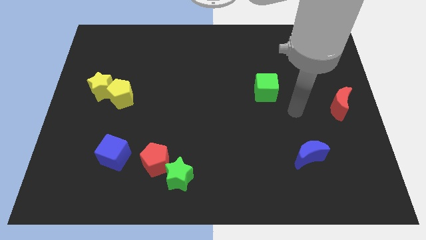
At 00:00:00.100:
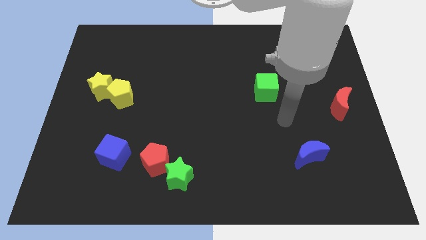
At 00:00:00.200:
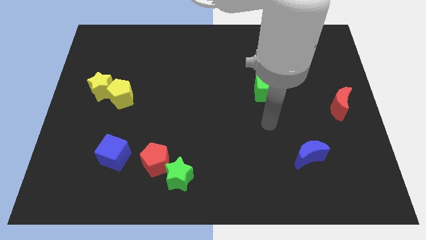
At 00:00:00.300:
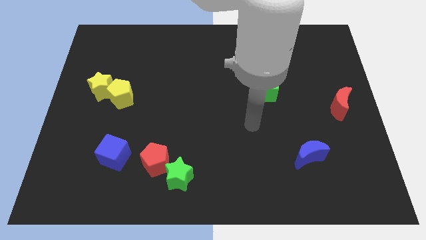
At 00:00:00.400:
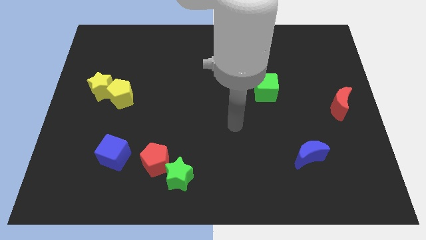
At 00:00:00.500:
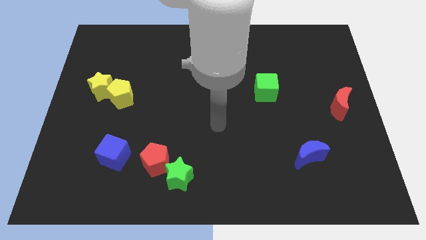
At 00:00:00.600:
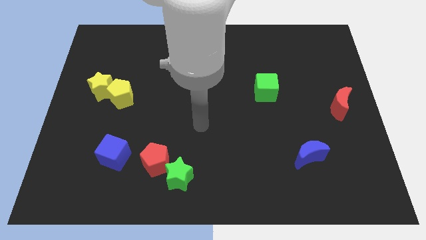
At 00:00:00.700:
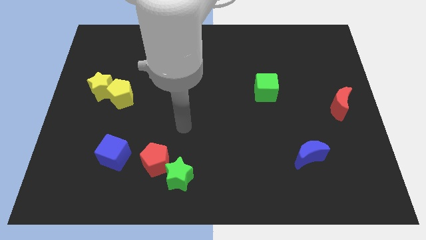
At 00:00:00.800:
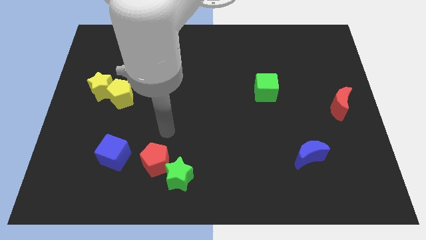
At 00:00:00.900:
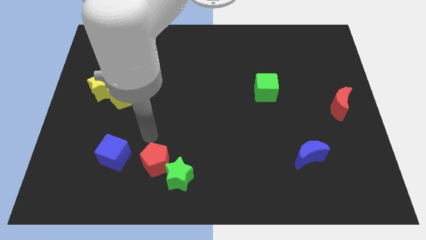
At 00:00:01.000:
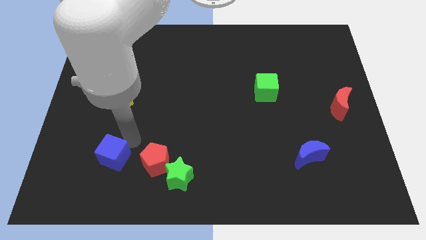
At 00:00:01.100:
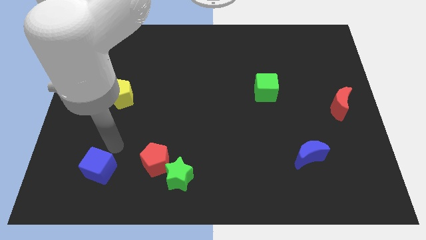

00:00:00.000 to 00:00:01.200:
move the blue cube

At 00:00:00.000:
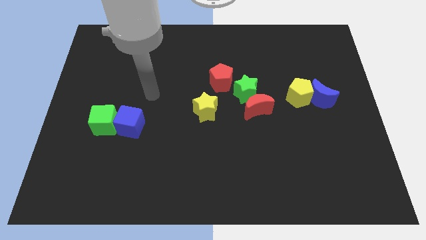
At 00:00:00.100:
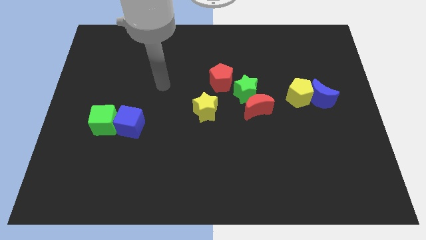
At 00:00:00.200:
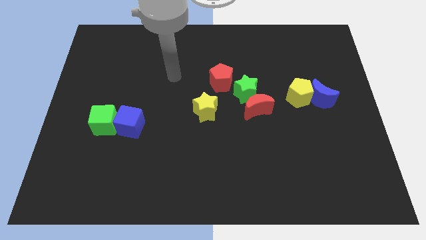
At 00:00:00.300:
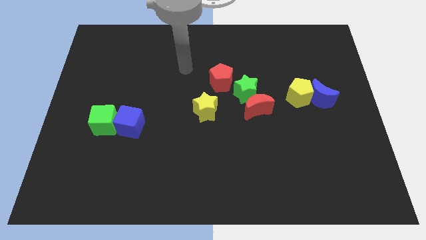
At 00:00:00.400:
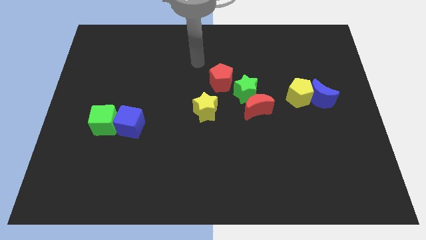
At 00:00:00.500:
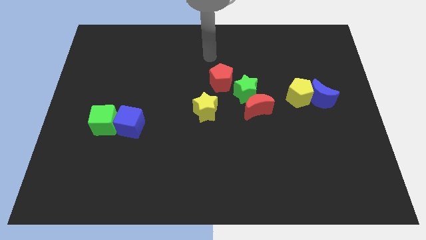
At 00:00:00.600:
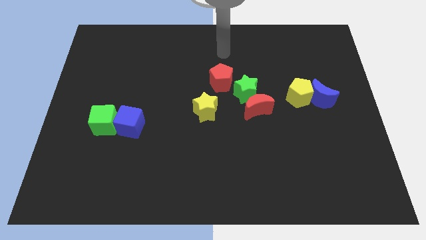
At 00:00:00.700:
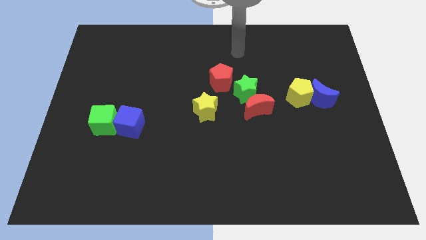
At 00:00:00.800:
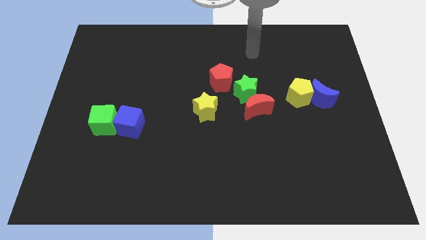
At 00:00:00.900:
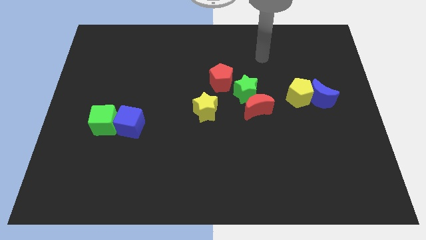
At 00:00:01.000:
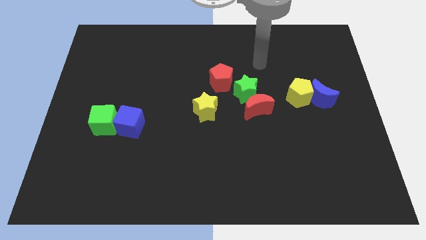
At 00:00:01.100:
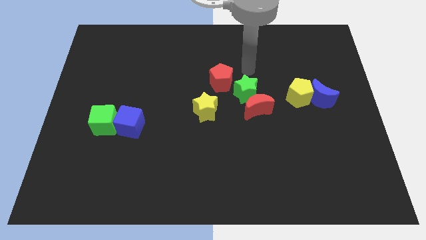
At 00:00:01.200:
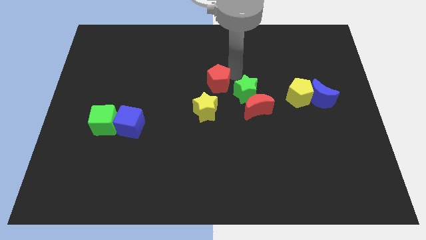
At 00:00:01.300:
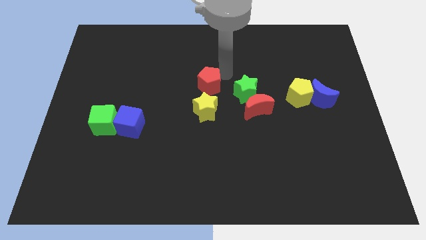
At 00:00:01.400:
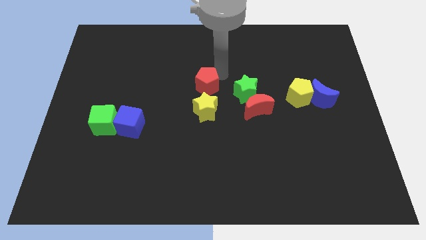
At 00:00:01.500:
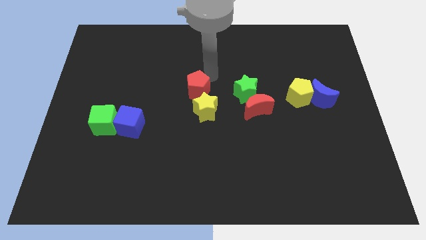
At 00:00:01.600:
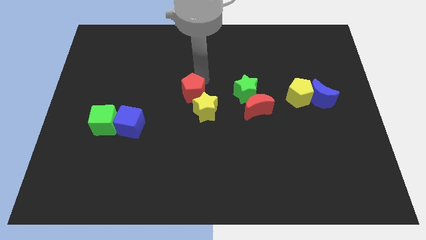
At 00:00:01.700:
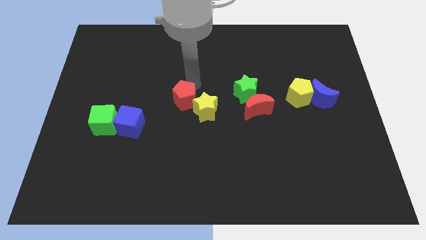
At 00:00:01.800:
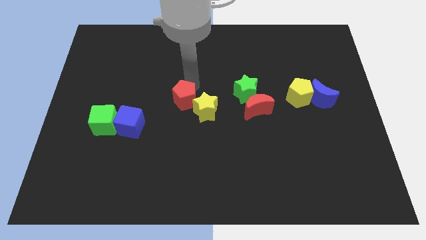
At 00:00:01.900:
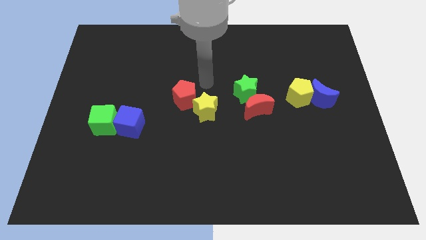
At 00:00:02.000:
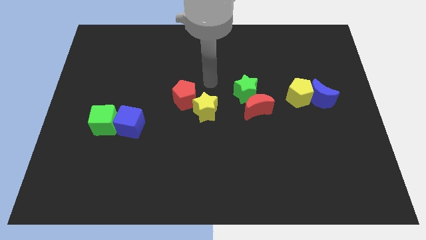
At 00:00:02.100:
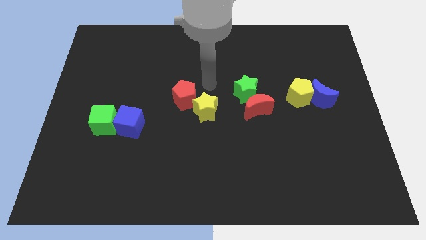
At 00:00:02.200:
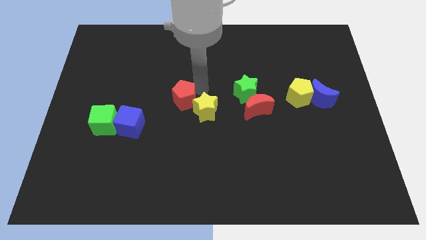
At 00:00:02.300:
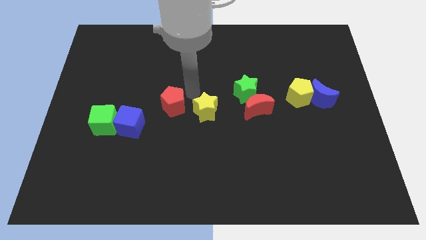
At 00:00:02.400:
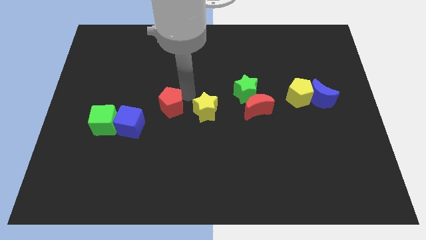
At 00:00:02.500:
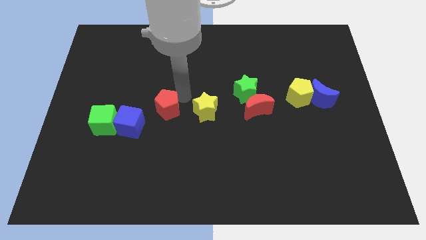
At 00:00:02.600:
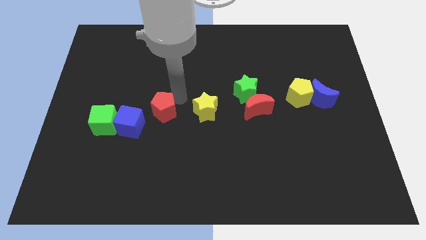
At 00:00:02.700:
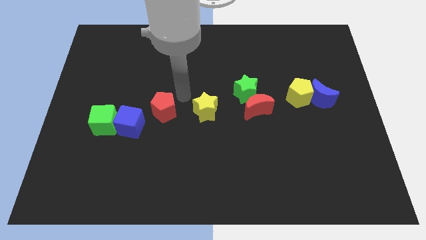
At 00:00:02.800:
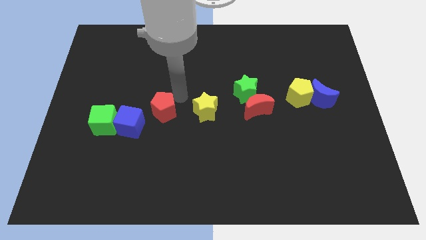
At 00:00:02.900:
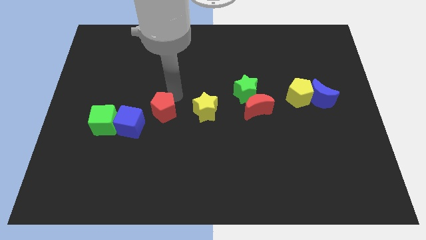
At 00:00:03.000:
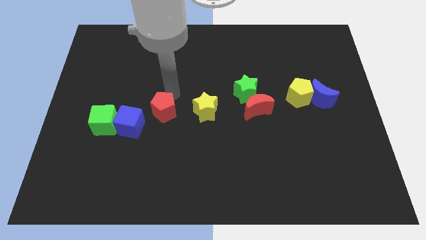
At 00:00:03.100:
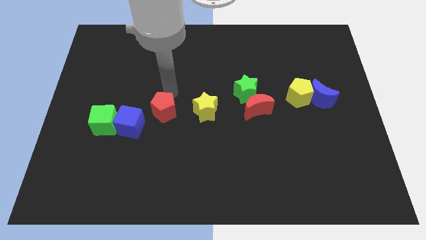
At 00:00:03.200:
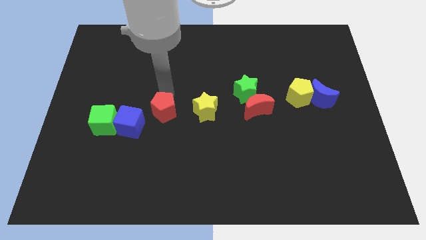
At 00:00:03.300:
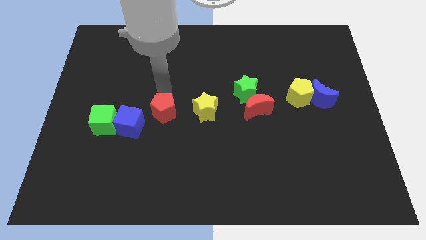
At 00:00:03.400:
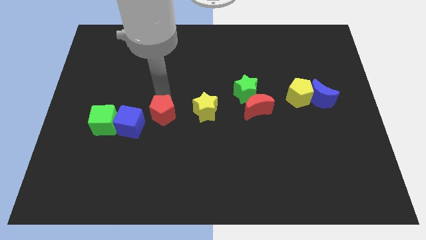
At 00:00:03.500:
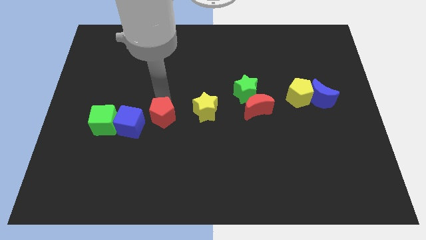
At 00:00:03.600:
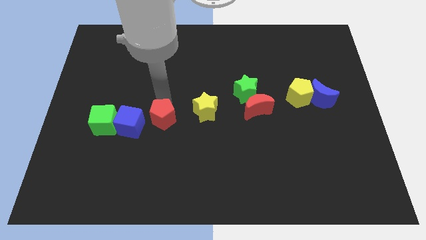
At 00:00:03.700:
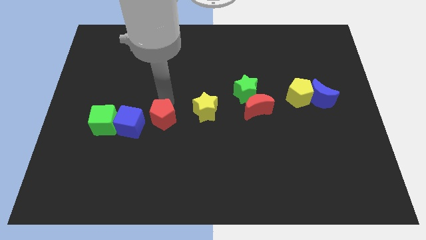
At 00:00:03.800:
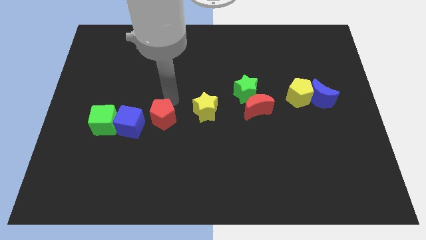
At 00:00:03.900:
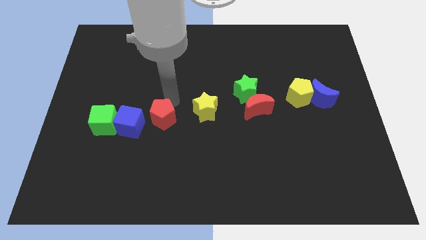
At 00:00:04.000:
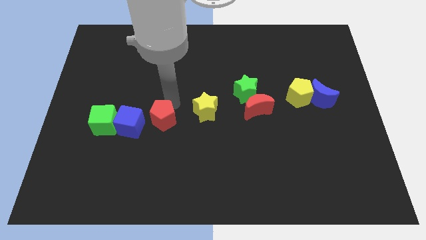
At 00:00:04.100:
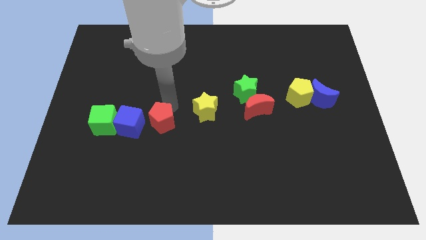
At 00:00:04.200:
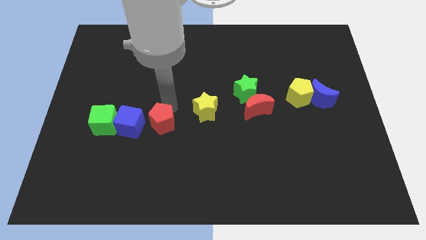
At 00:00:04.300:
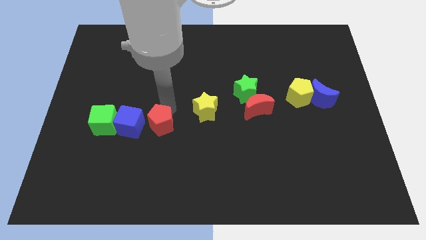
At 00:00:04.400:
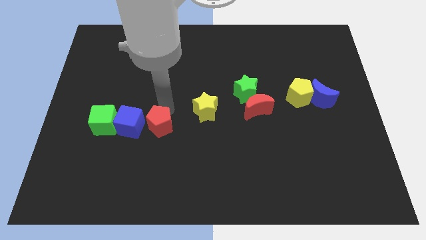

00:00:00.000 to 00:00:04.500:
place the red pentagon near the blue cube

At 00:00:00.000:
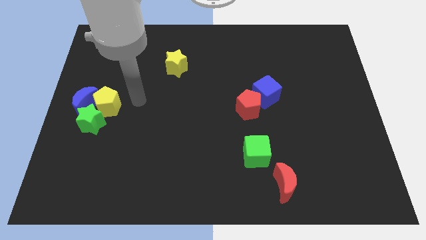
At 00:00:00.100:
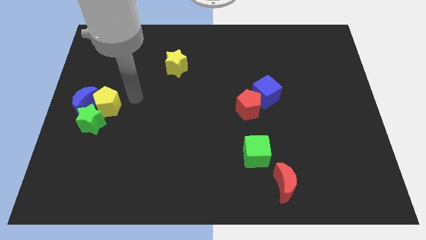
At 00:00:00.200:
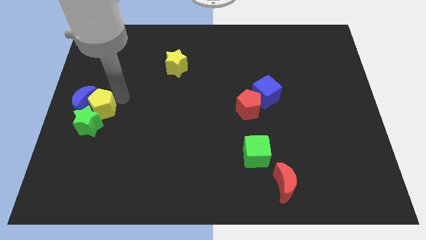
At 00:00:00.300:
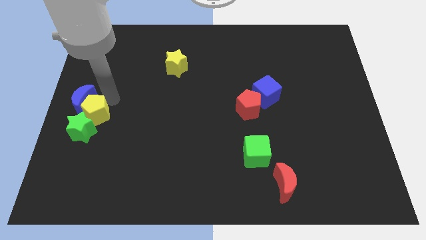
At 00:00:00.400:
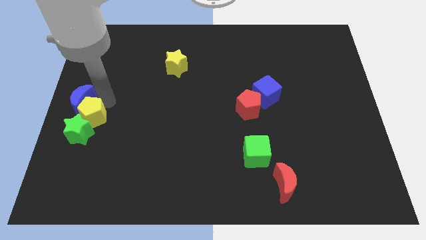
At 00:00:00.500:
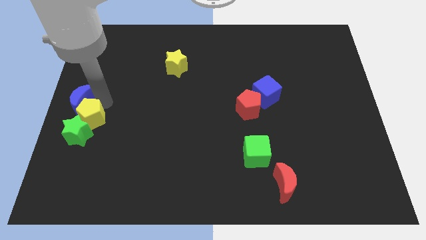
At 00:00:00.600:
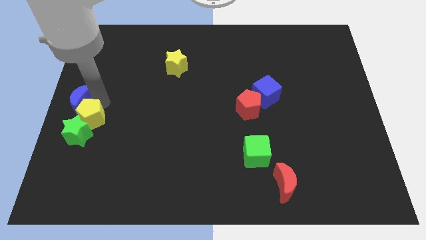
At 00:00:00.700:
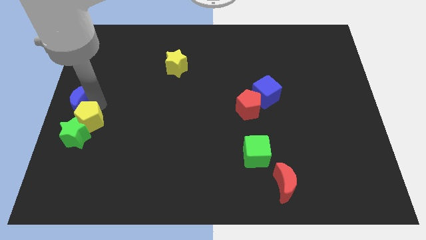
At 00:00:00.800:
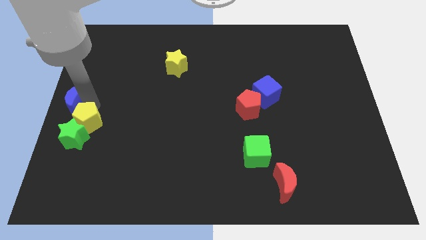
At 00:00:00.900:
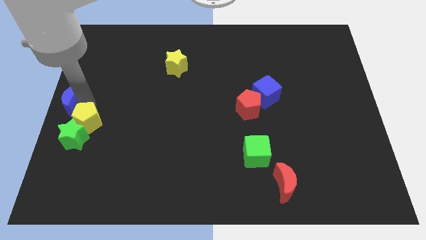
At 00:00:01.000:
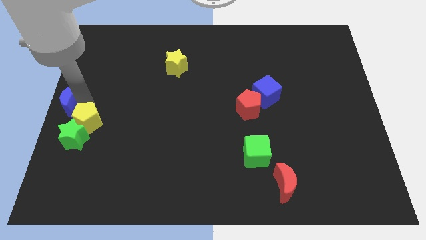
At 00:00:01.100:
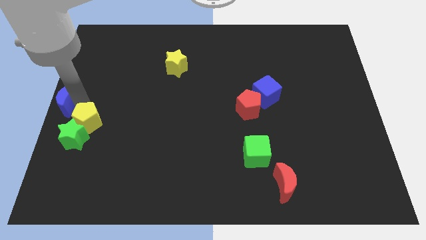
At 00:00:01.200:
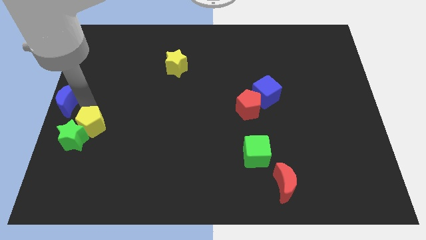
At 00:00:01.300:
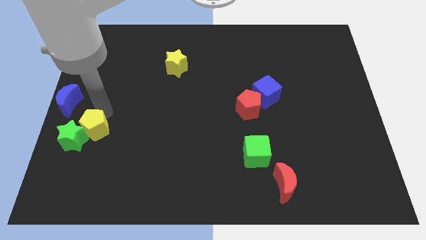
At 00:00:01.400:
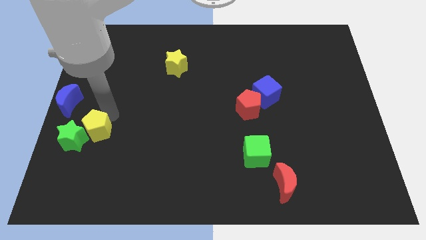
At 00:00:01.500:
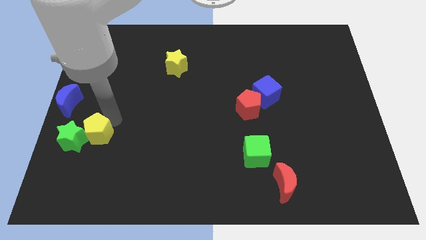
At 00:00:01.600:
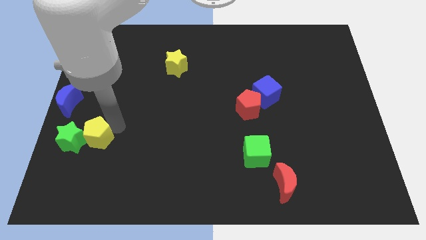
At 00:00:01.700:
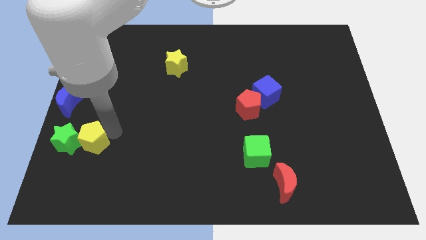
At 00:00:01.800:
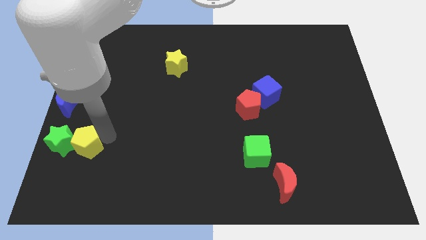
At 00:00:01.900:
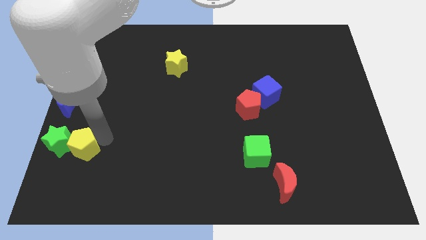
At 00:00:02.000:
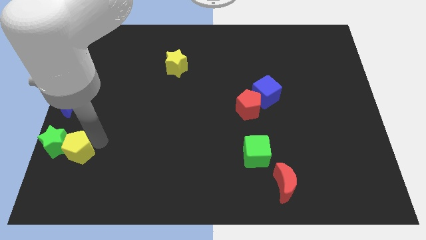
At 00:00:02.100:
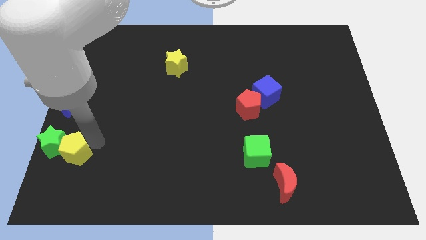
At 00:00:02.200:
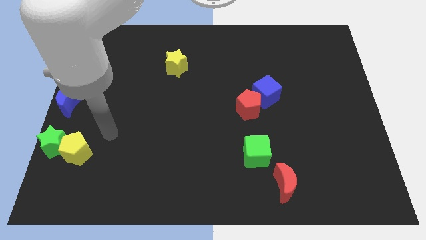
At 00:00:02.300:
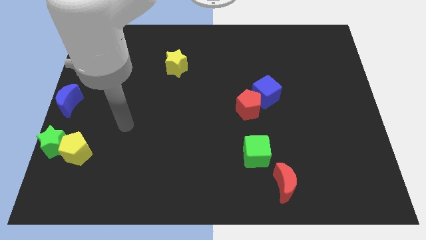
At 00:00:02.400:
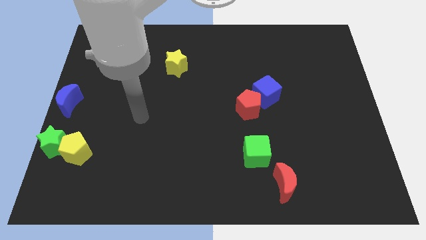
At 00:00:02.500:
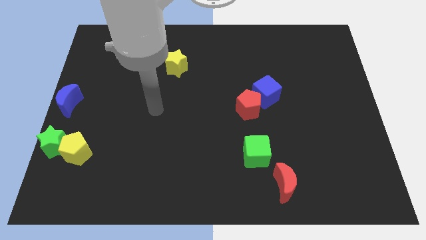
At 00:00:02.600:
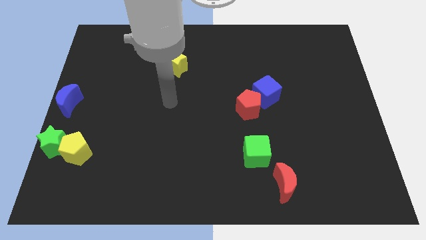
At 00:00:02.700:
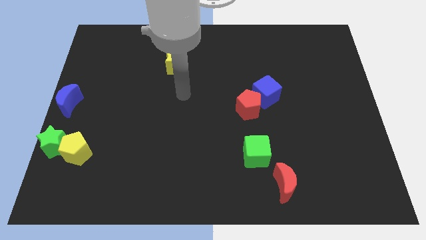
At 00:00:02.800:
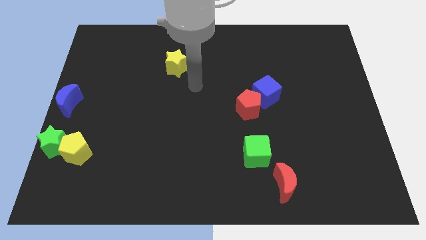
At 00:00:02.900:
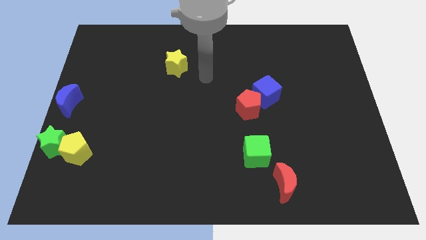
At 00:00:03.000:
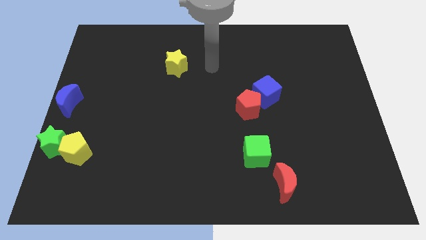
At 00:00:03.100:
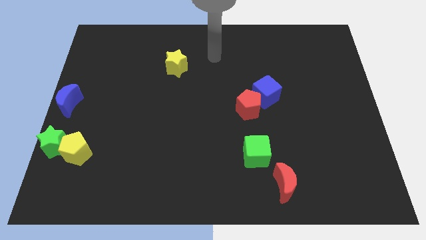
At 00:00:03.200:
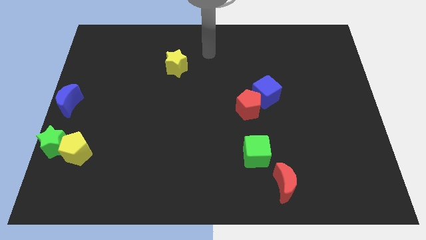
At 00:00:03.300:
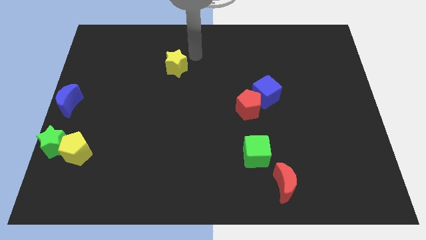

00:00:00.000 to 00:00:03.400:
separate blue moon from the green star and the yellow pentagon
